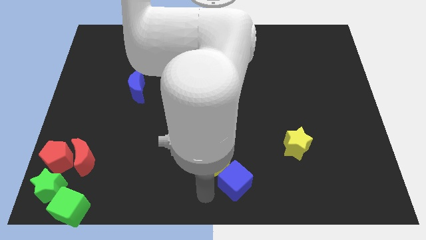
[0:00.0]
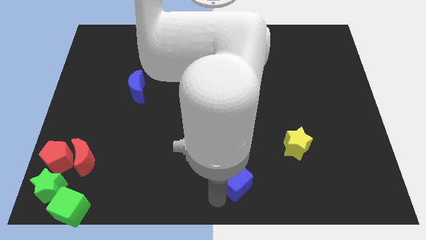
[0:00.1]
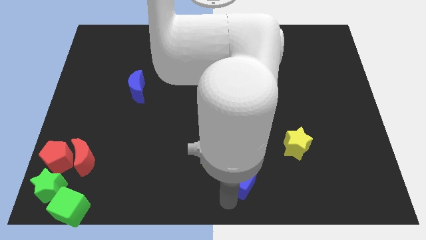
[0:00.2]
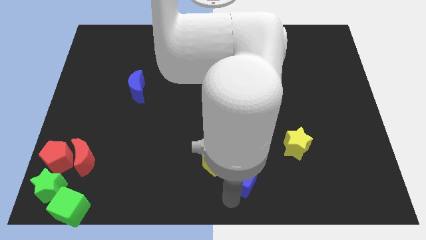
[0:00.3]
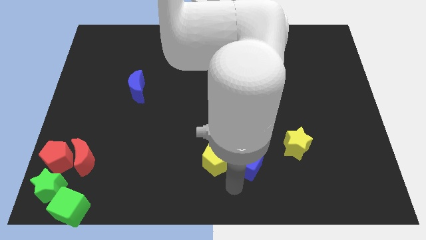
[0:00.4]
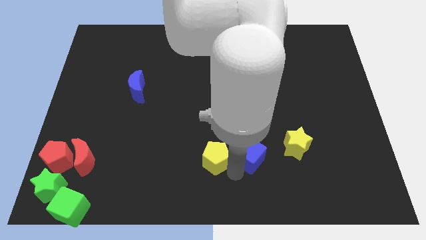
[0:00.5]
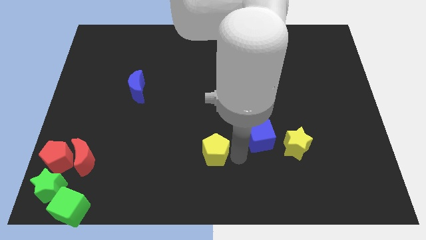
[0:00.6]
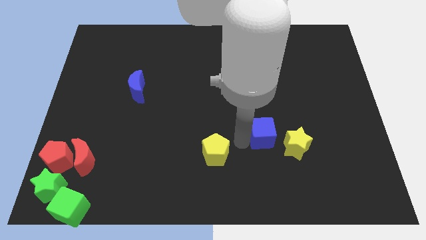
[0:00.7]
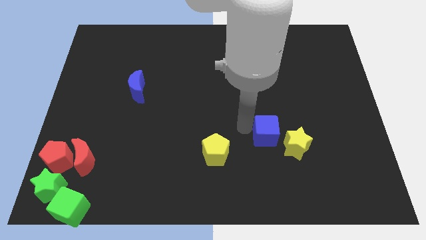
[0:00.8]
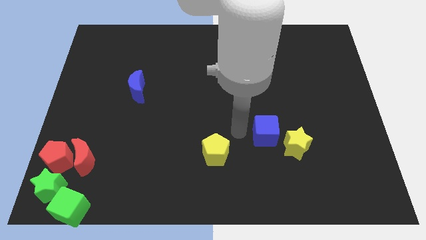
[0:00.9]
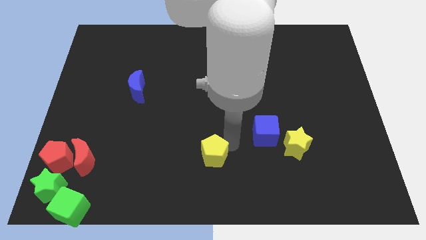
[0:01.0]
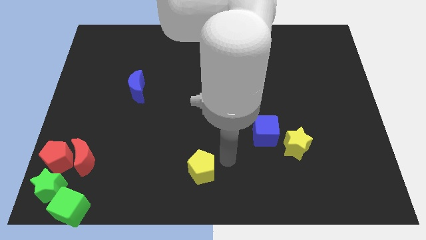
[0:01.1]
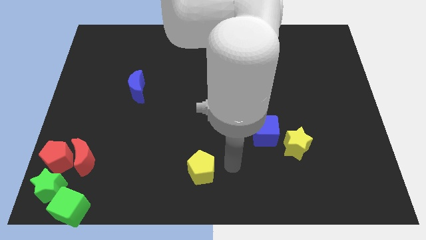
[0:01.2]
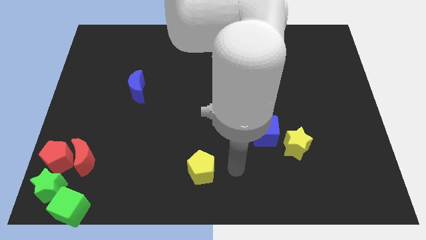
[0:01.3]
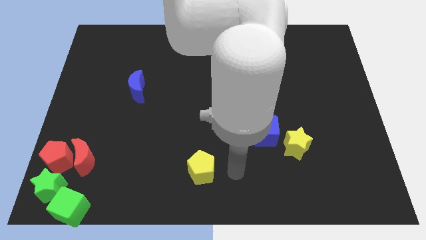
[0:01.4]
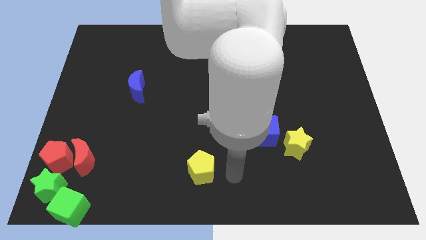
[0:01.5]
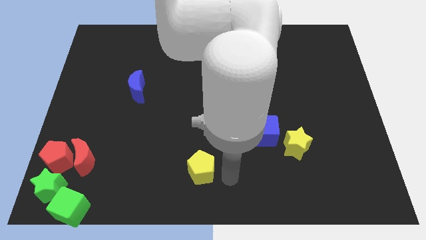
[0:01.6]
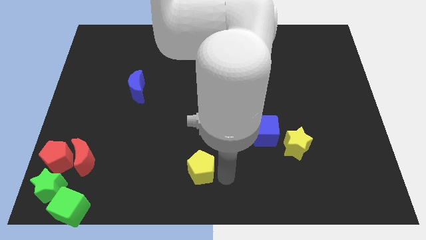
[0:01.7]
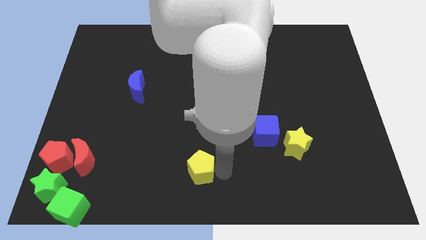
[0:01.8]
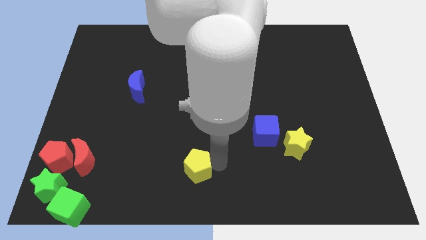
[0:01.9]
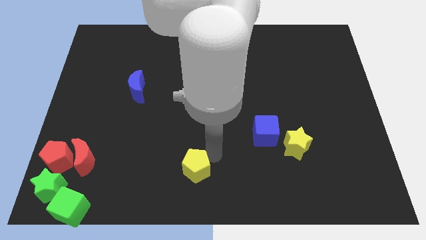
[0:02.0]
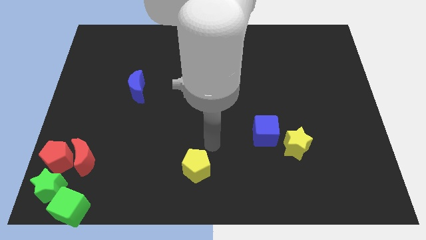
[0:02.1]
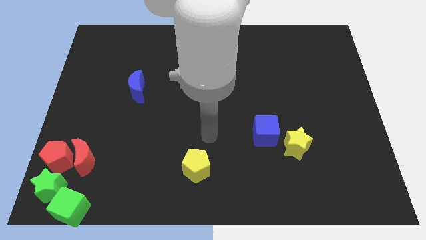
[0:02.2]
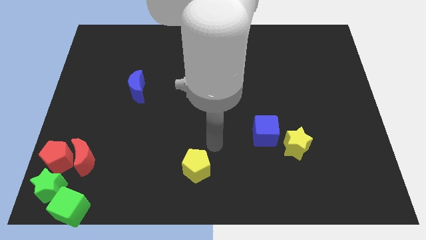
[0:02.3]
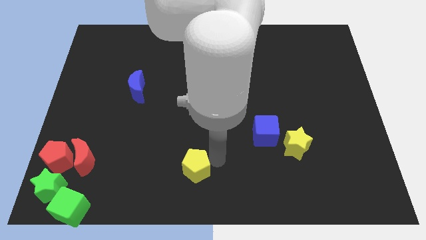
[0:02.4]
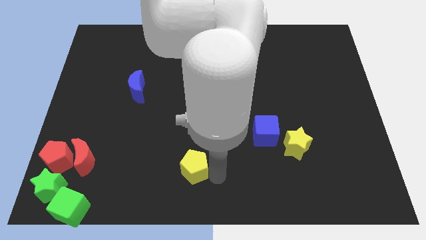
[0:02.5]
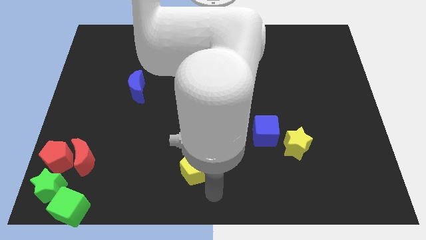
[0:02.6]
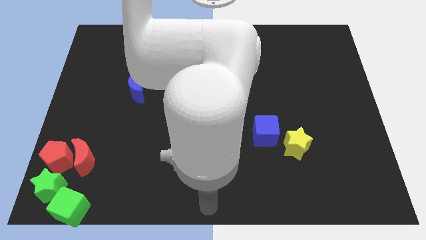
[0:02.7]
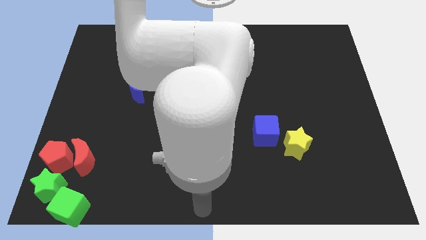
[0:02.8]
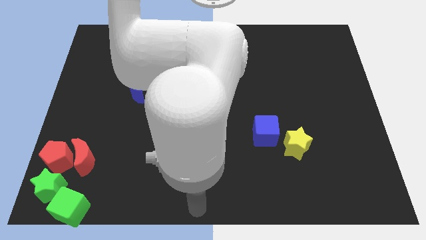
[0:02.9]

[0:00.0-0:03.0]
place blue cube to the top left of yellow star

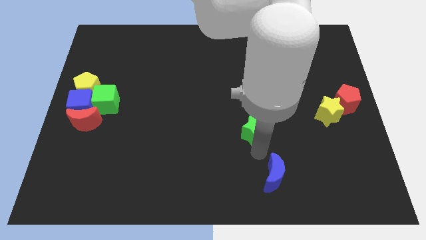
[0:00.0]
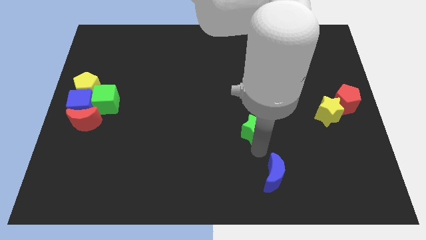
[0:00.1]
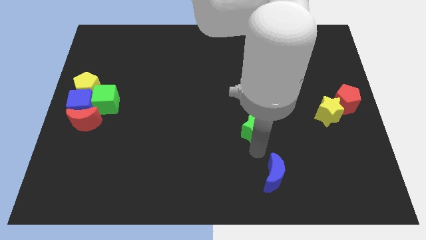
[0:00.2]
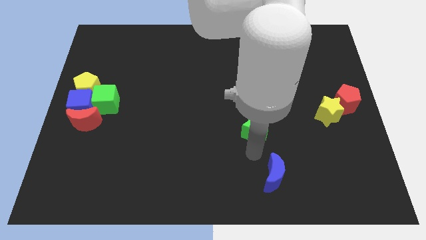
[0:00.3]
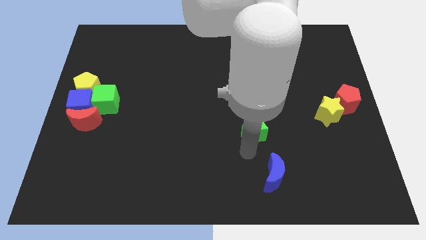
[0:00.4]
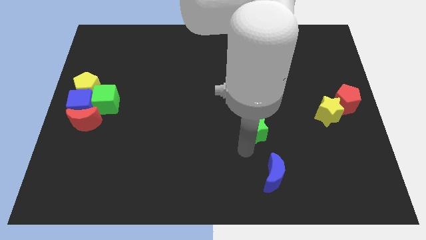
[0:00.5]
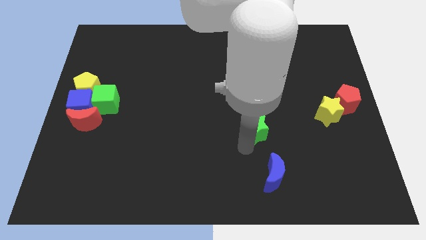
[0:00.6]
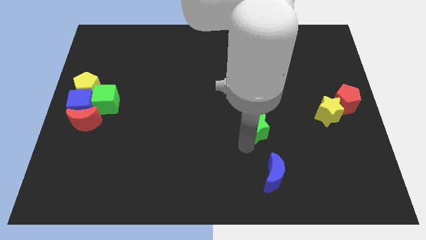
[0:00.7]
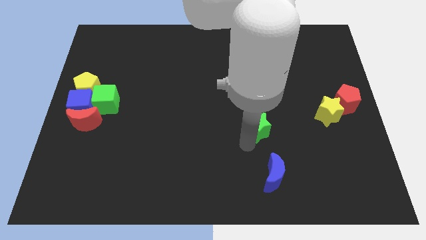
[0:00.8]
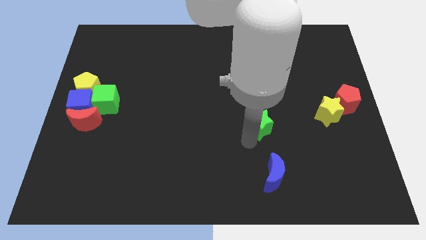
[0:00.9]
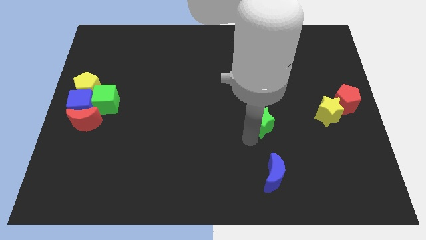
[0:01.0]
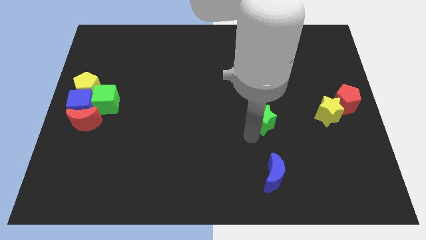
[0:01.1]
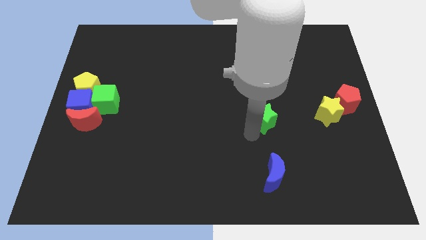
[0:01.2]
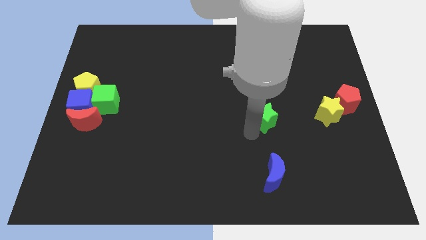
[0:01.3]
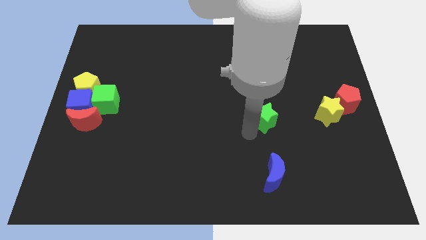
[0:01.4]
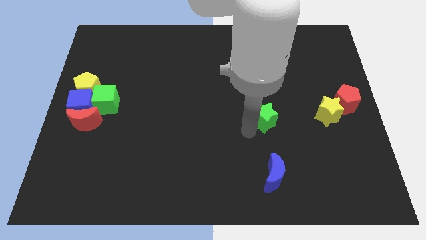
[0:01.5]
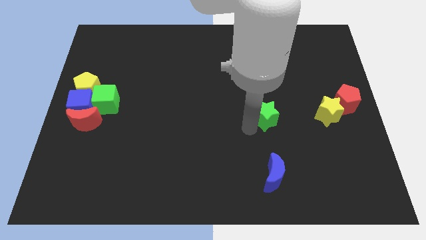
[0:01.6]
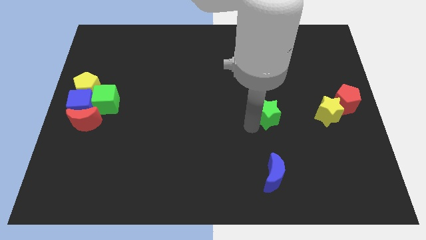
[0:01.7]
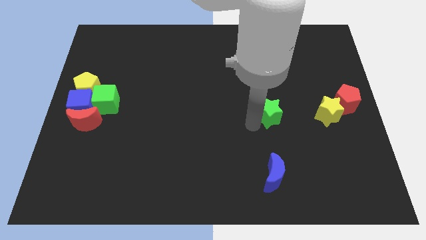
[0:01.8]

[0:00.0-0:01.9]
separate the green star parallel to the yellow star

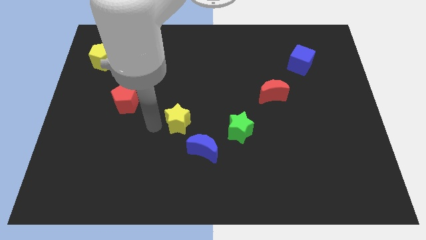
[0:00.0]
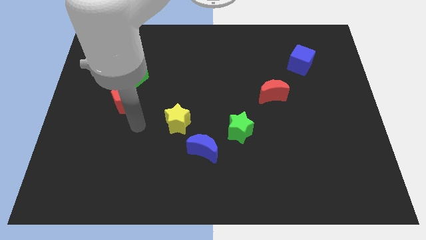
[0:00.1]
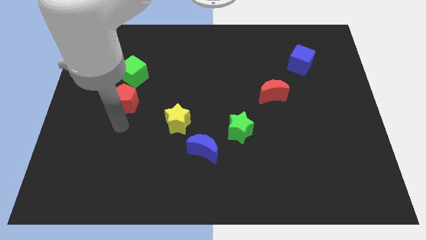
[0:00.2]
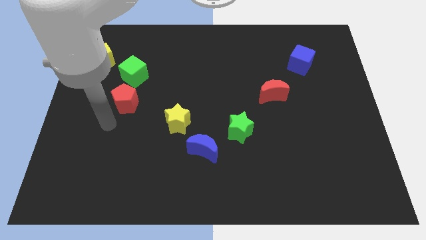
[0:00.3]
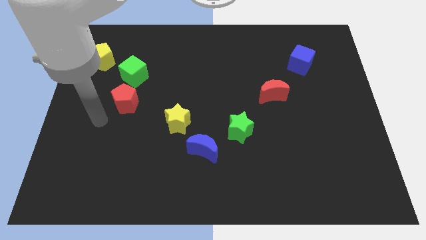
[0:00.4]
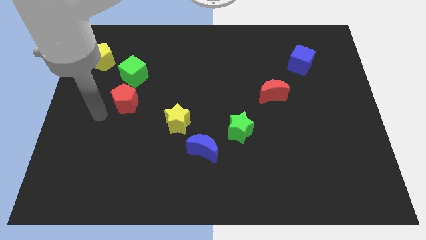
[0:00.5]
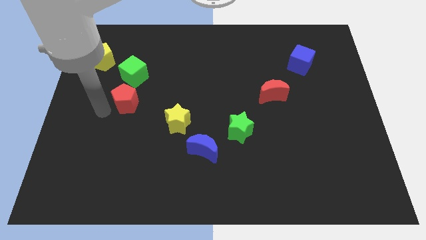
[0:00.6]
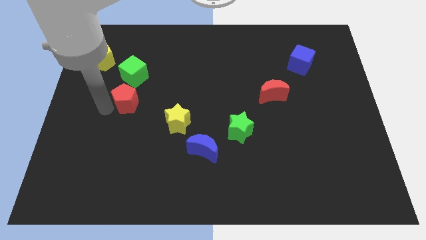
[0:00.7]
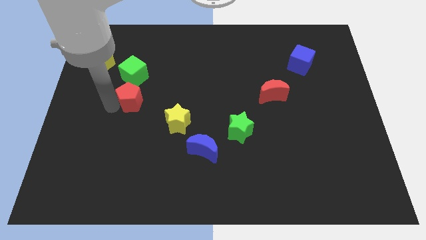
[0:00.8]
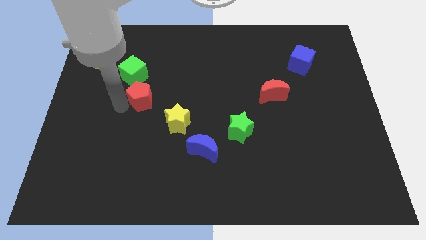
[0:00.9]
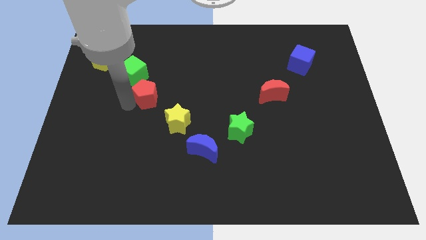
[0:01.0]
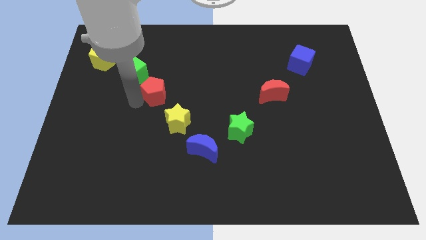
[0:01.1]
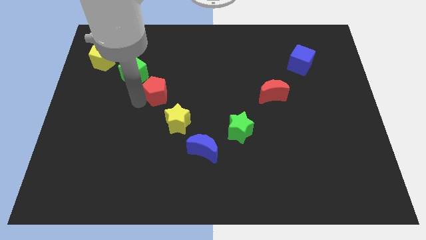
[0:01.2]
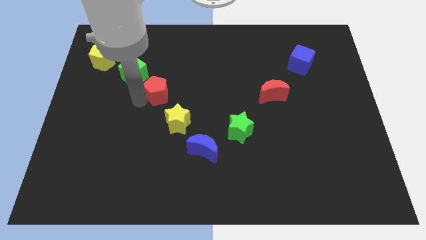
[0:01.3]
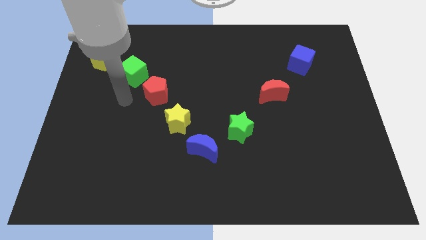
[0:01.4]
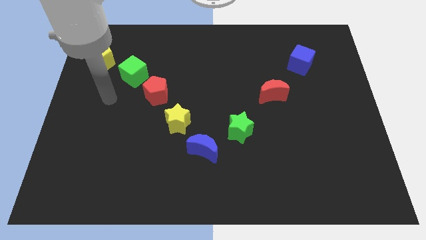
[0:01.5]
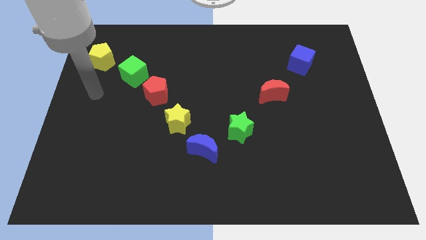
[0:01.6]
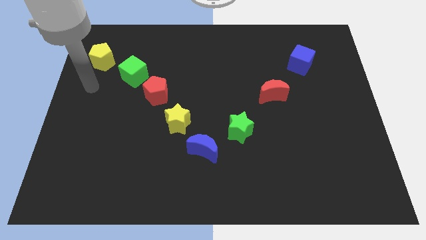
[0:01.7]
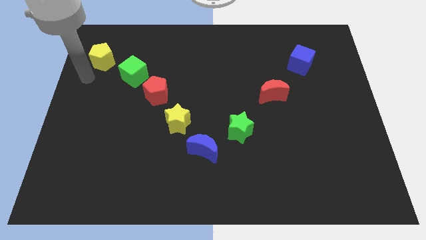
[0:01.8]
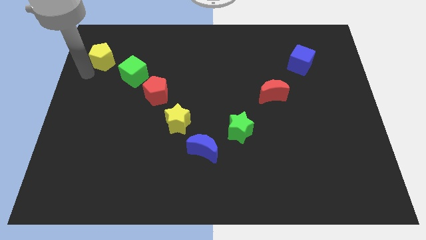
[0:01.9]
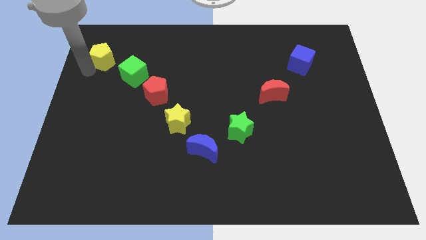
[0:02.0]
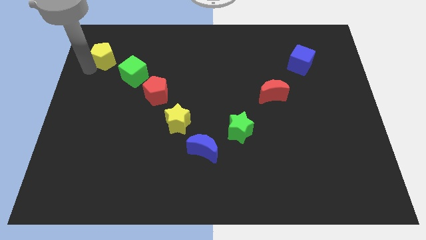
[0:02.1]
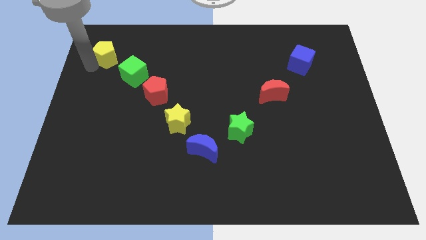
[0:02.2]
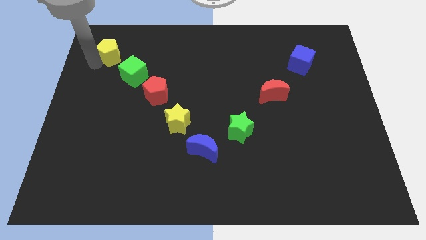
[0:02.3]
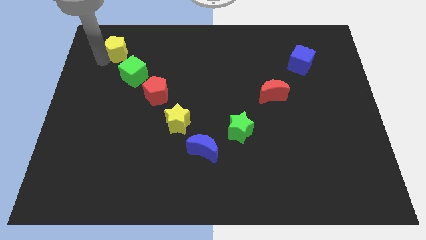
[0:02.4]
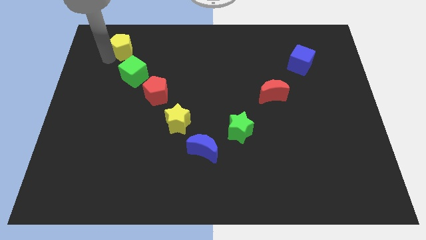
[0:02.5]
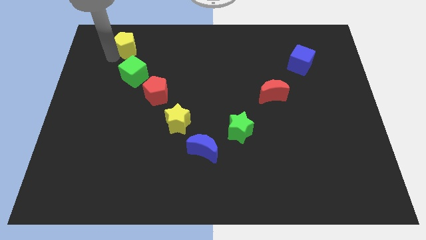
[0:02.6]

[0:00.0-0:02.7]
push red crescent above the yellow star

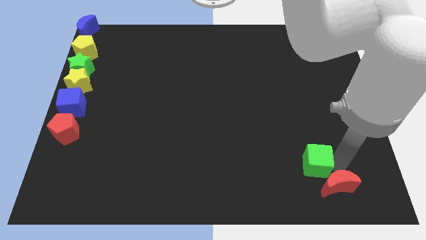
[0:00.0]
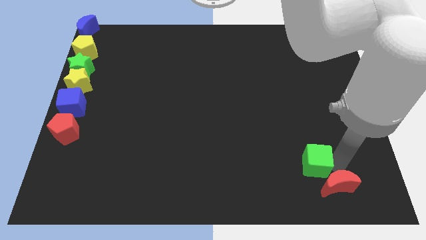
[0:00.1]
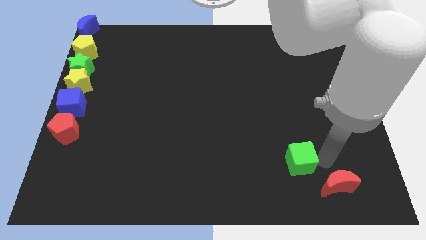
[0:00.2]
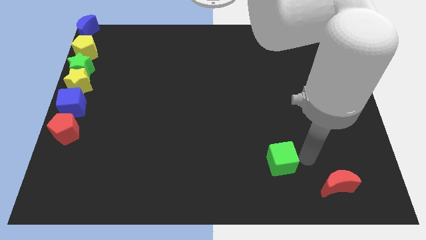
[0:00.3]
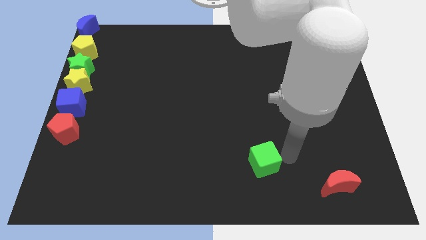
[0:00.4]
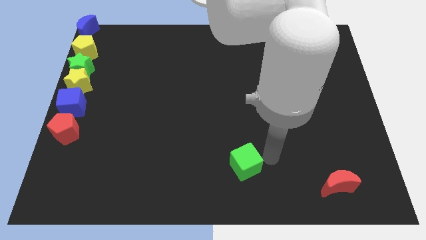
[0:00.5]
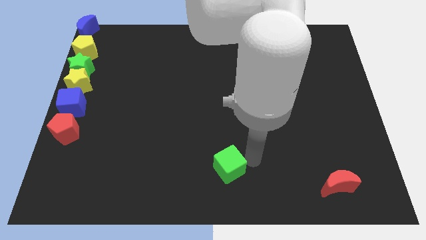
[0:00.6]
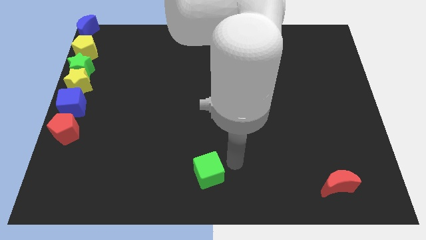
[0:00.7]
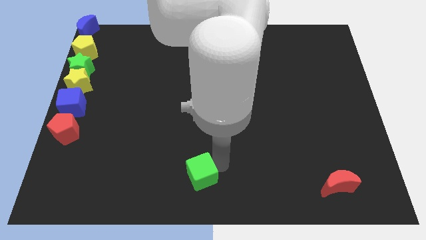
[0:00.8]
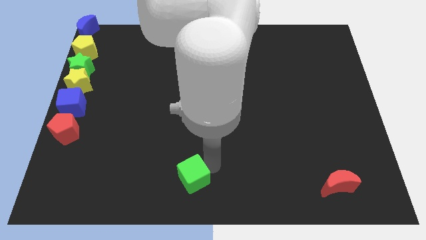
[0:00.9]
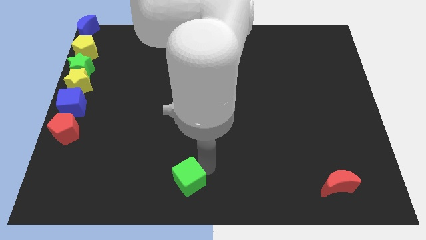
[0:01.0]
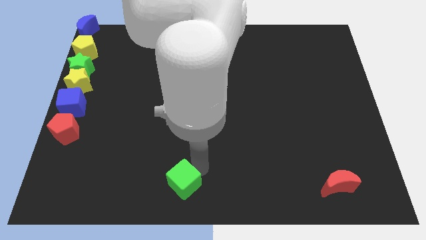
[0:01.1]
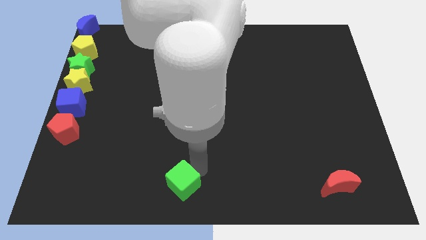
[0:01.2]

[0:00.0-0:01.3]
push the green cube away from the red crescent
